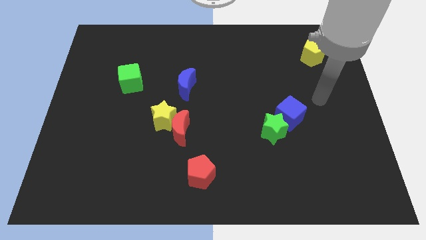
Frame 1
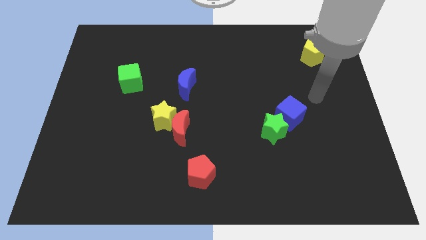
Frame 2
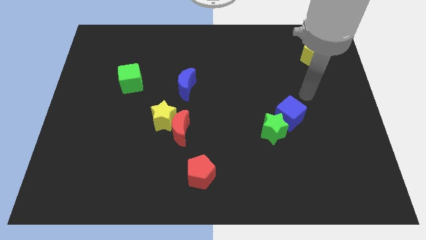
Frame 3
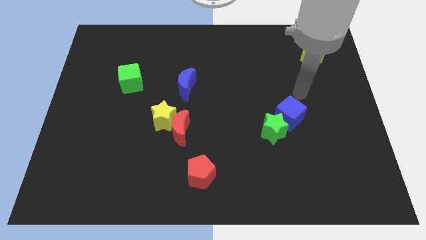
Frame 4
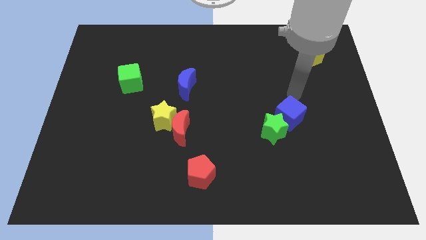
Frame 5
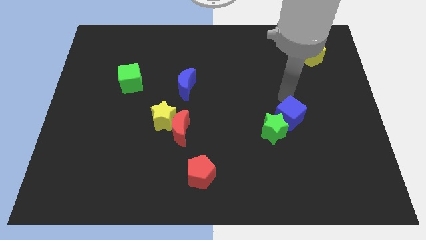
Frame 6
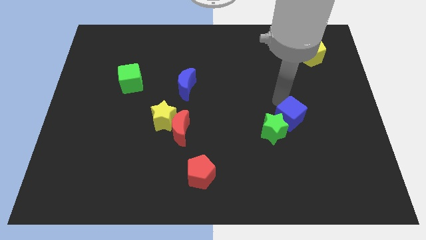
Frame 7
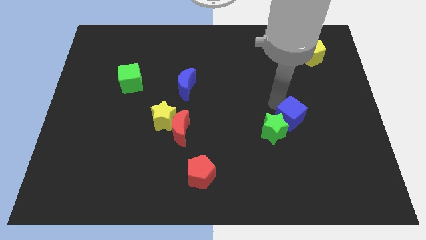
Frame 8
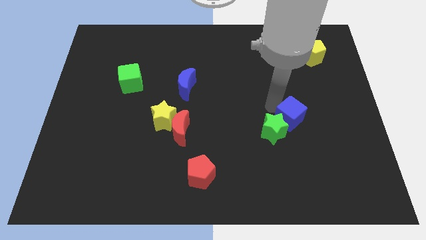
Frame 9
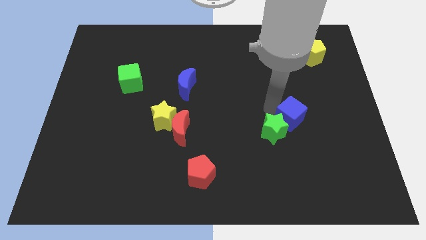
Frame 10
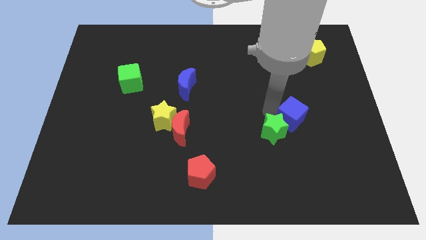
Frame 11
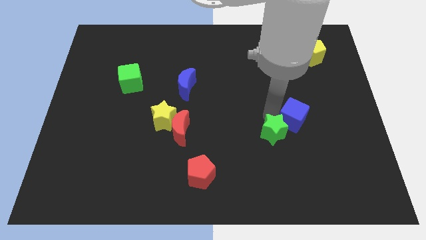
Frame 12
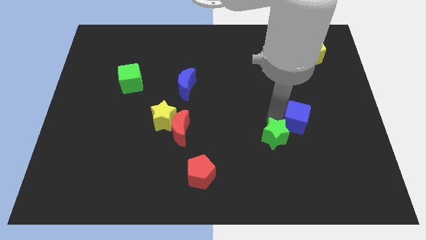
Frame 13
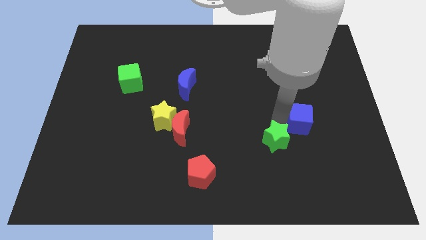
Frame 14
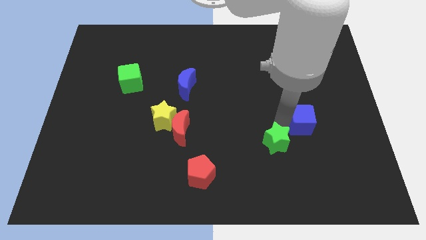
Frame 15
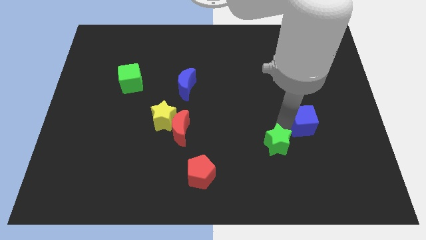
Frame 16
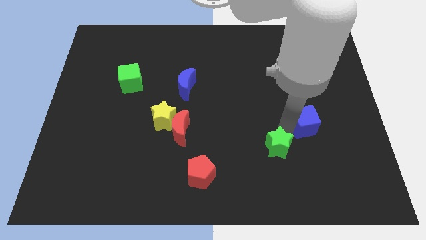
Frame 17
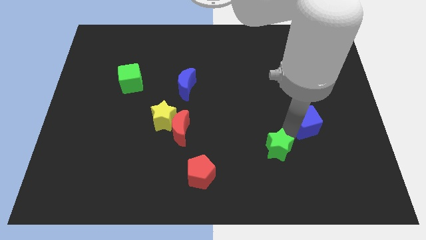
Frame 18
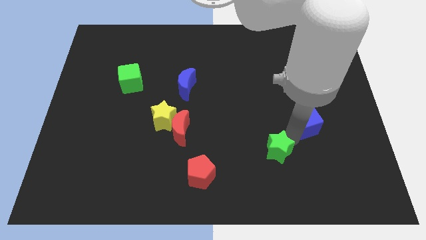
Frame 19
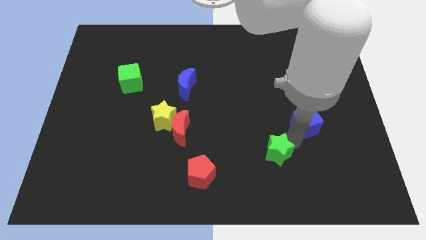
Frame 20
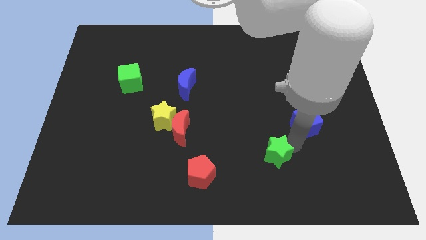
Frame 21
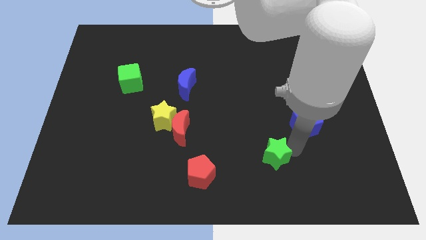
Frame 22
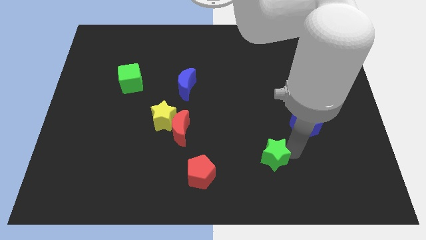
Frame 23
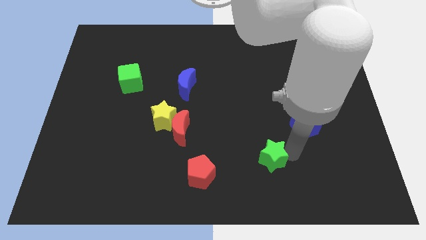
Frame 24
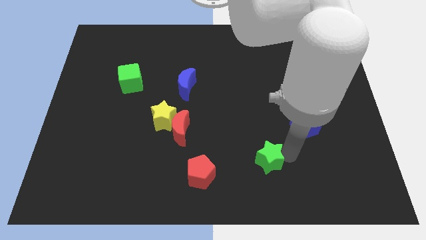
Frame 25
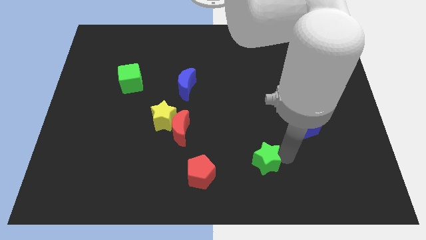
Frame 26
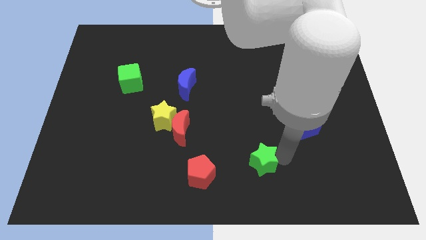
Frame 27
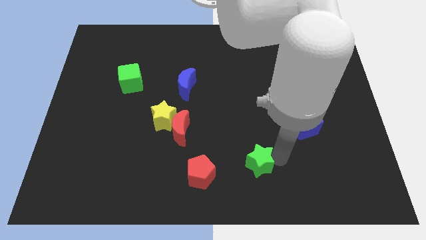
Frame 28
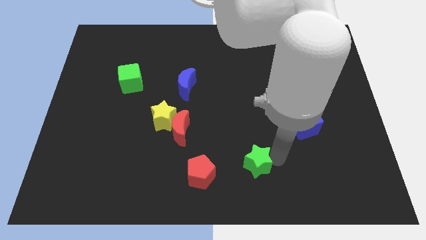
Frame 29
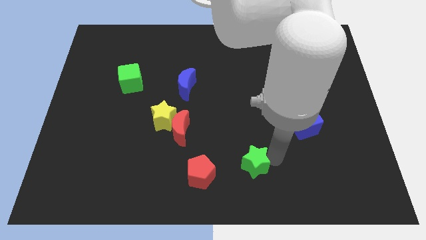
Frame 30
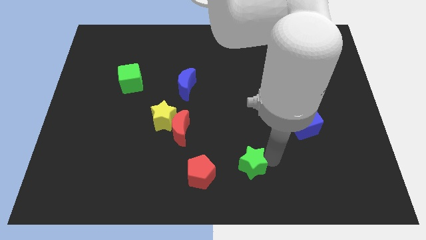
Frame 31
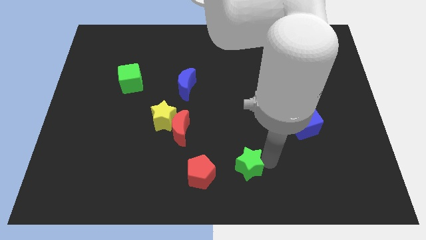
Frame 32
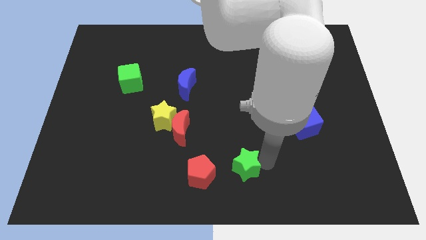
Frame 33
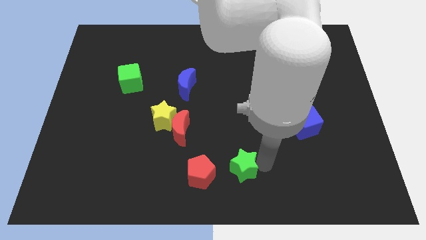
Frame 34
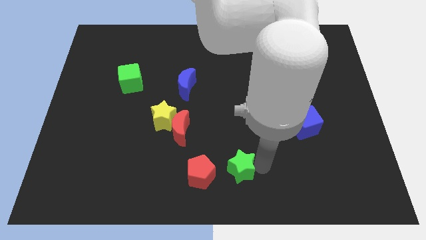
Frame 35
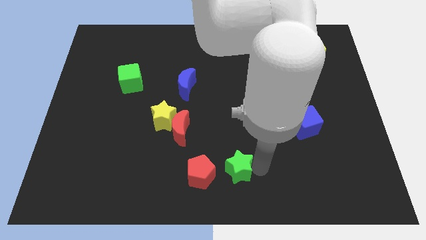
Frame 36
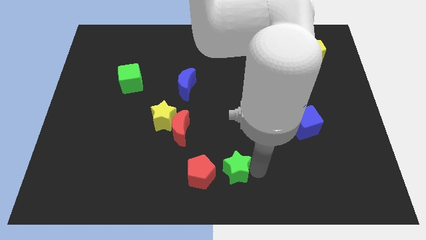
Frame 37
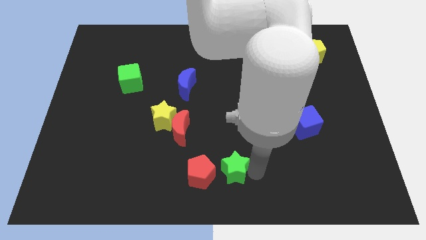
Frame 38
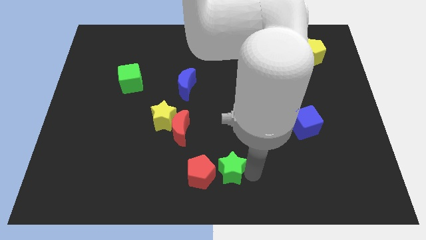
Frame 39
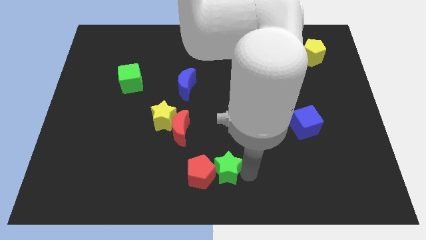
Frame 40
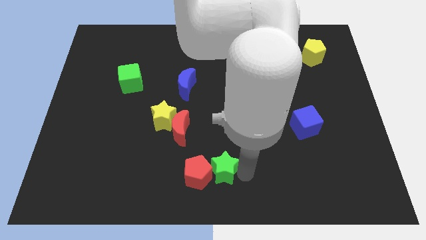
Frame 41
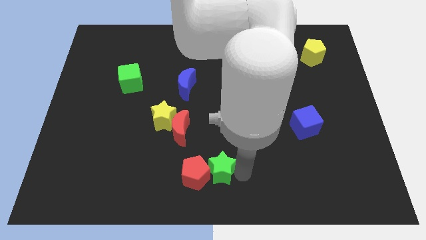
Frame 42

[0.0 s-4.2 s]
put the green star next to the red pentagon

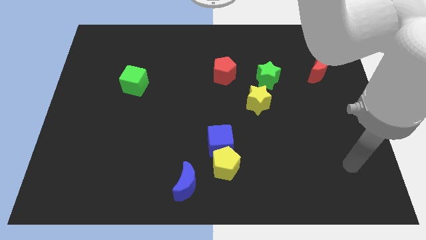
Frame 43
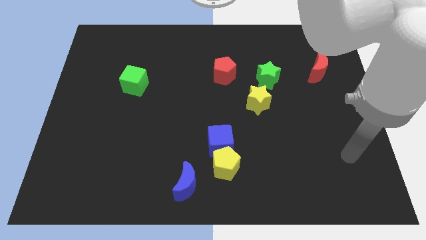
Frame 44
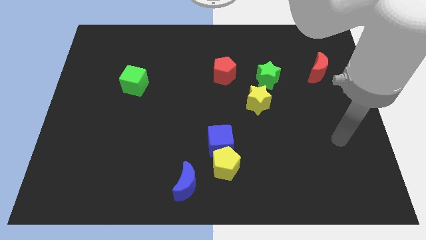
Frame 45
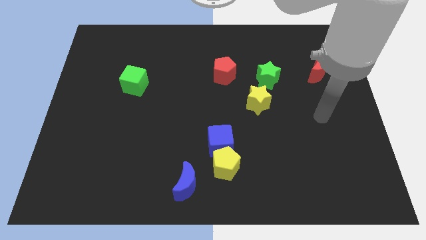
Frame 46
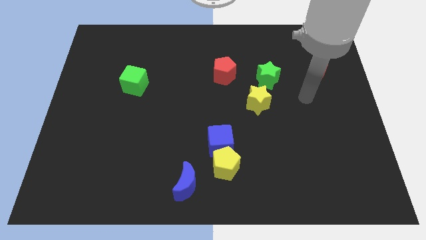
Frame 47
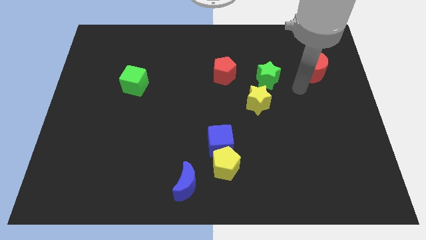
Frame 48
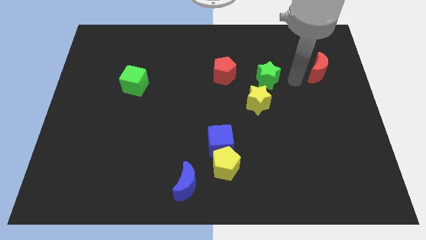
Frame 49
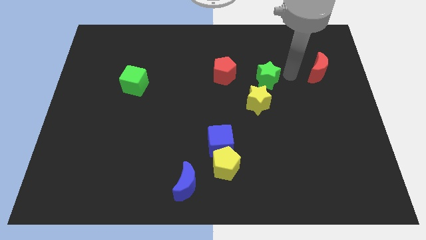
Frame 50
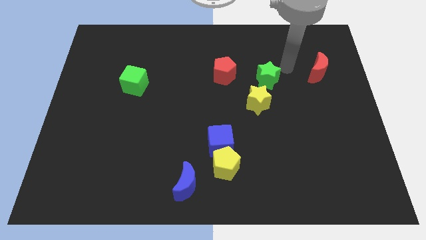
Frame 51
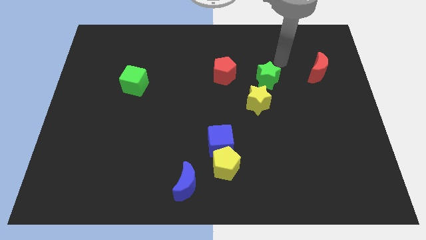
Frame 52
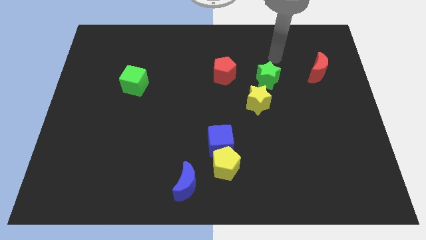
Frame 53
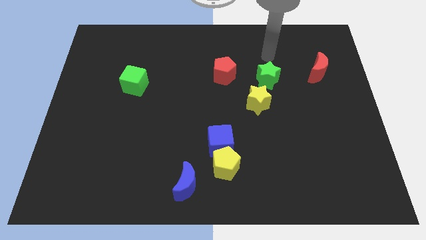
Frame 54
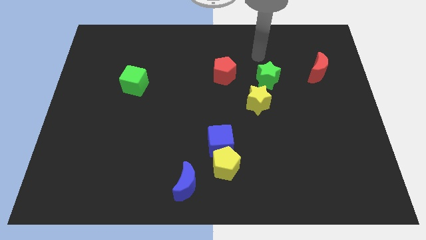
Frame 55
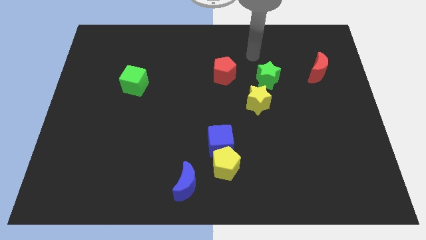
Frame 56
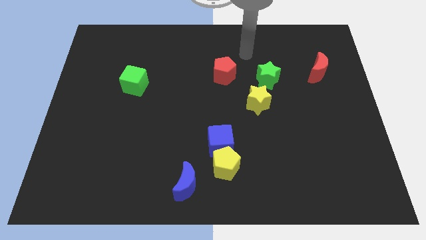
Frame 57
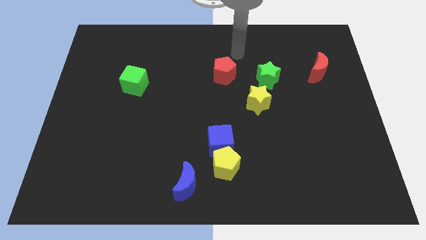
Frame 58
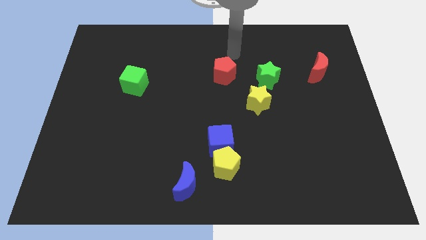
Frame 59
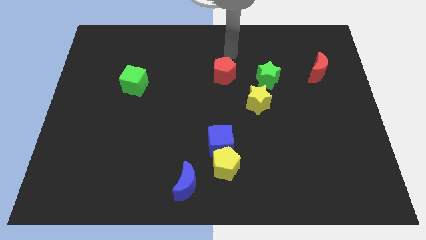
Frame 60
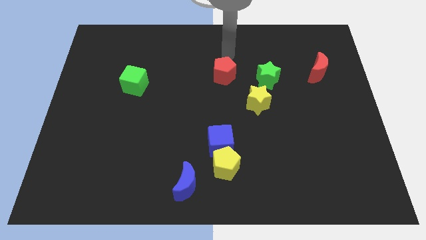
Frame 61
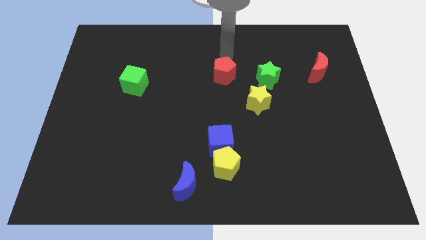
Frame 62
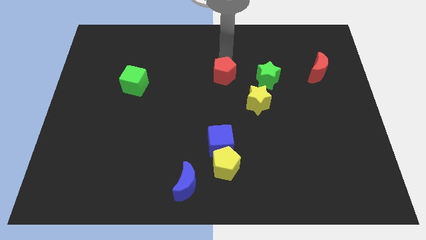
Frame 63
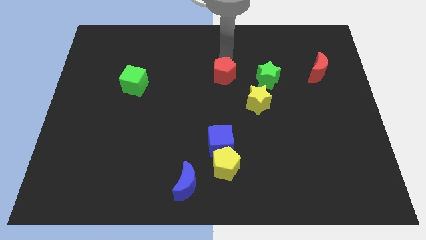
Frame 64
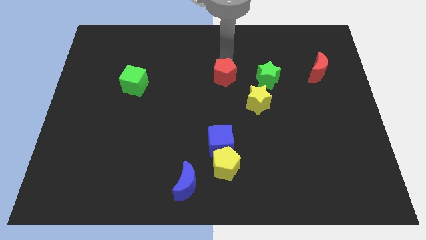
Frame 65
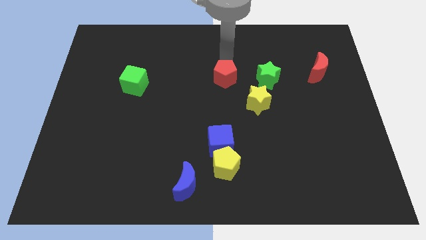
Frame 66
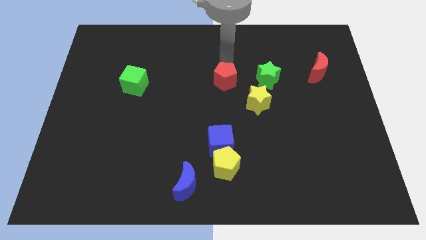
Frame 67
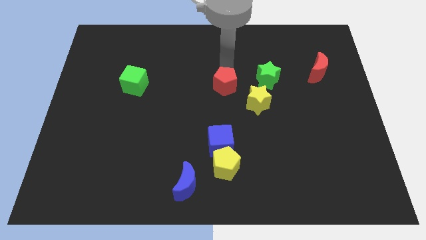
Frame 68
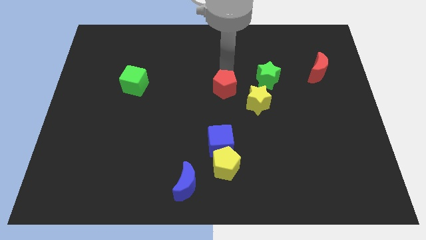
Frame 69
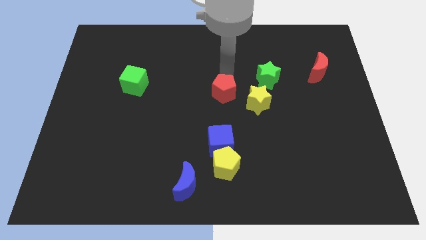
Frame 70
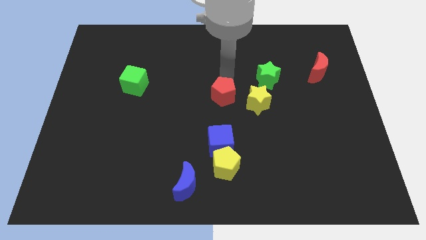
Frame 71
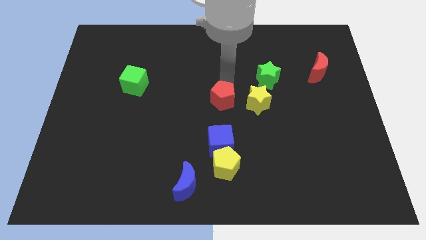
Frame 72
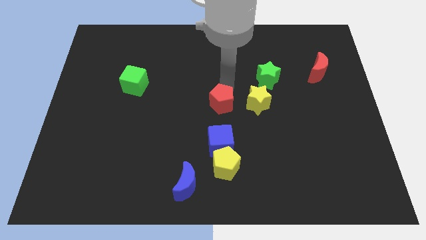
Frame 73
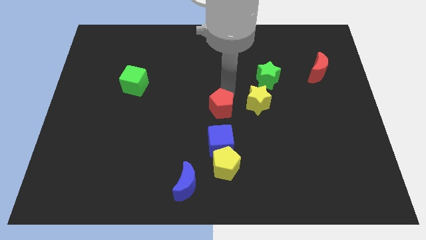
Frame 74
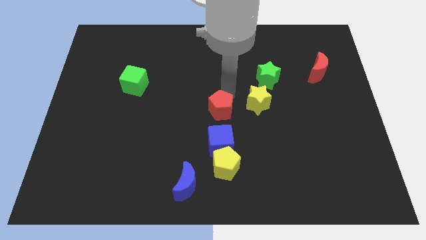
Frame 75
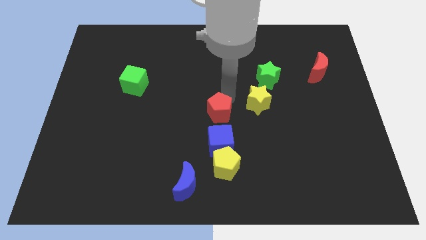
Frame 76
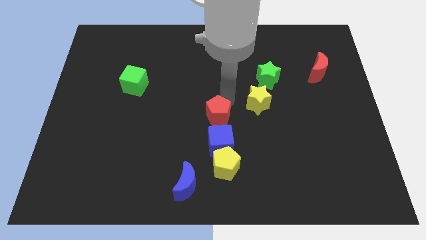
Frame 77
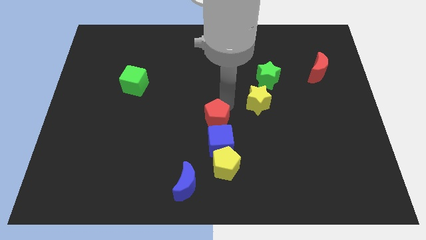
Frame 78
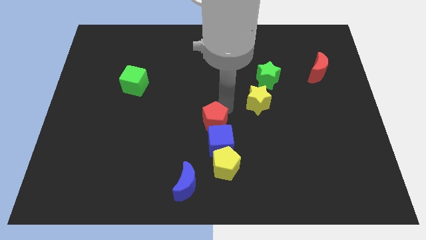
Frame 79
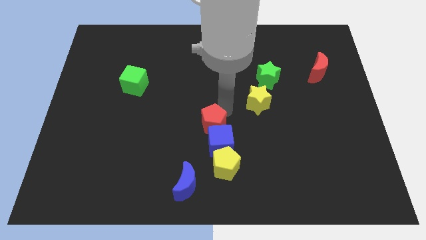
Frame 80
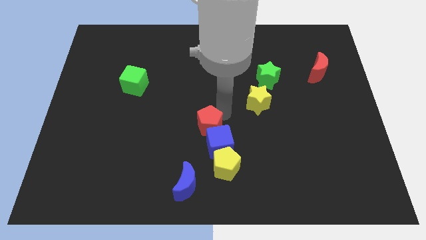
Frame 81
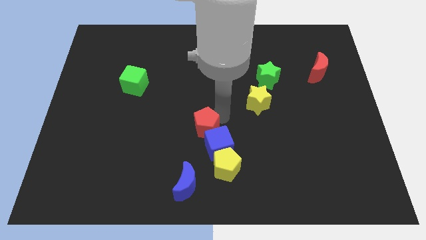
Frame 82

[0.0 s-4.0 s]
push the red pentagon close to the blue cube

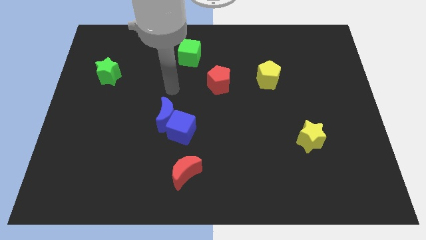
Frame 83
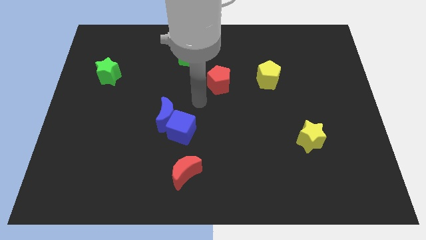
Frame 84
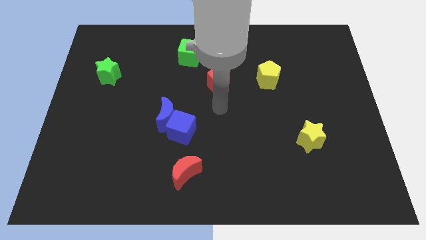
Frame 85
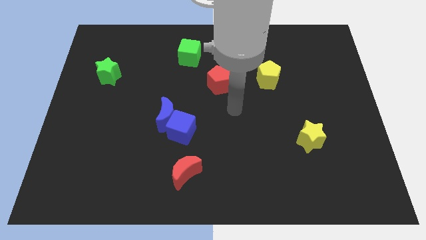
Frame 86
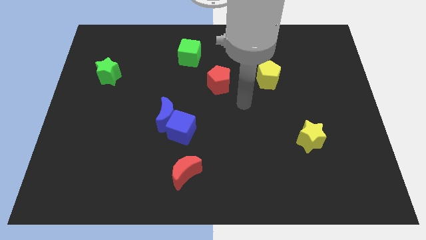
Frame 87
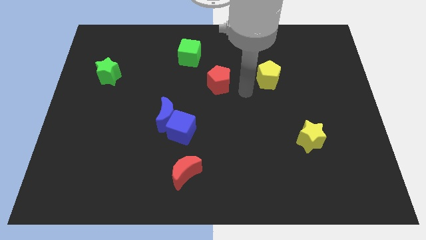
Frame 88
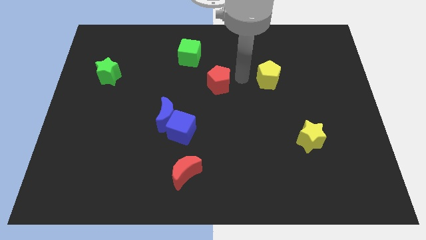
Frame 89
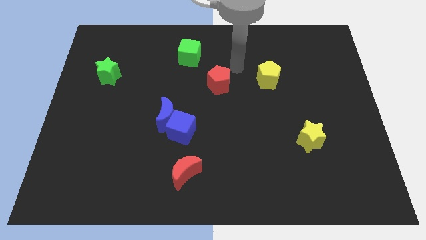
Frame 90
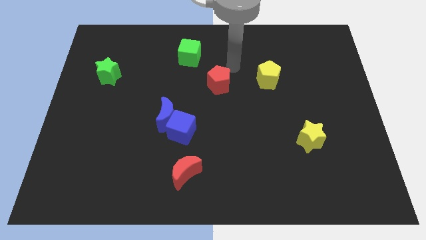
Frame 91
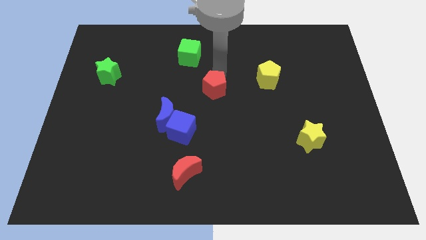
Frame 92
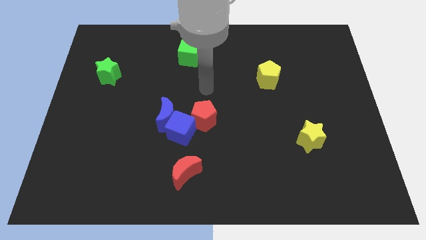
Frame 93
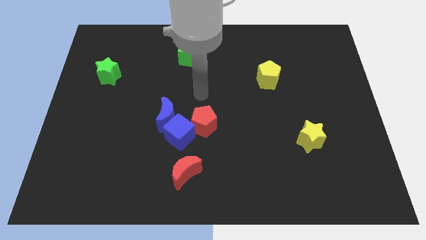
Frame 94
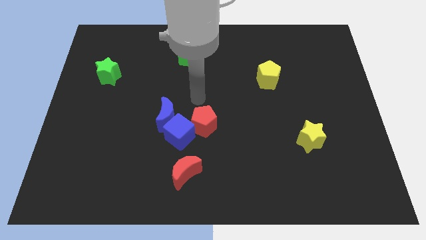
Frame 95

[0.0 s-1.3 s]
push the red pentagon towards the blue cube
